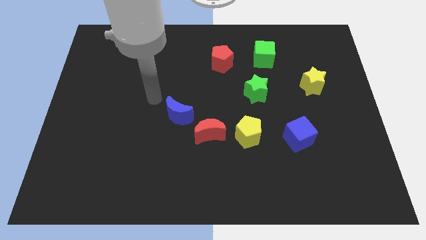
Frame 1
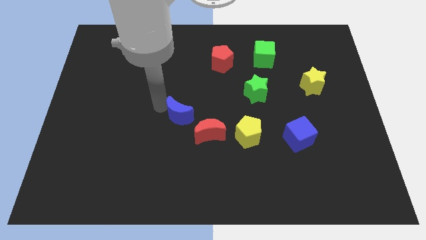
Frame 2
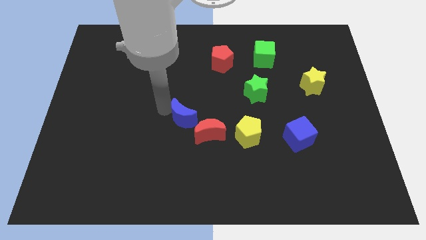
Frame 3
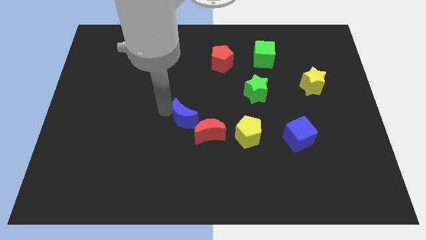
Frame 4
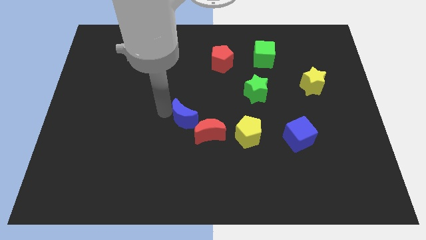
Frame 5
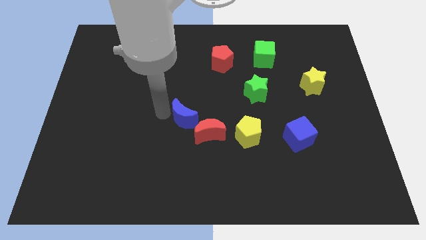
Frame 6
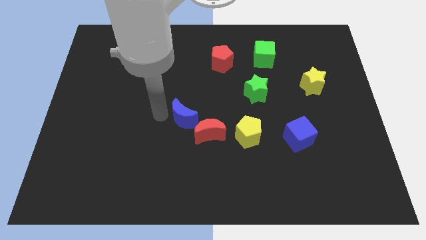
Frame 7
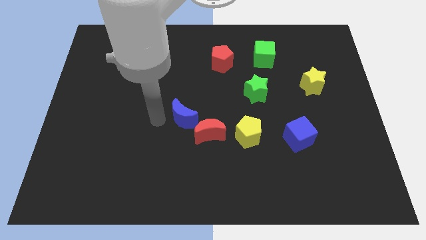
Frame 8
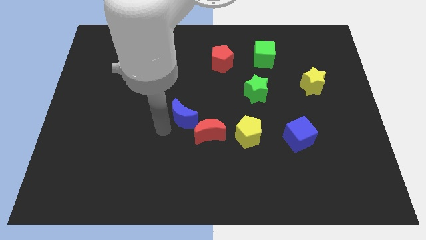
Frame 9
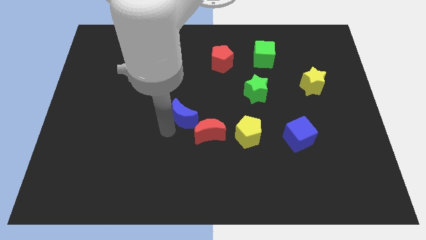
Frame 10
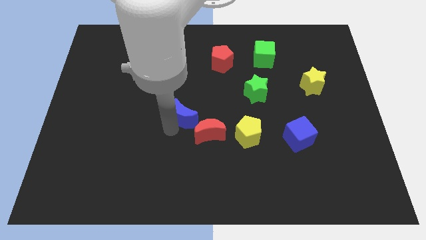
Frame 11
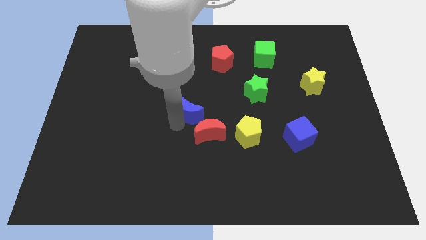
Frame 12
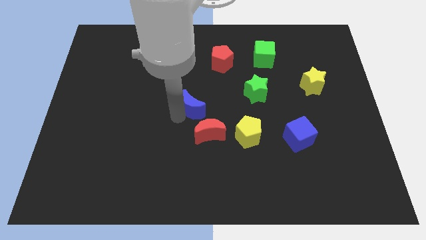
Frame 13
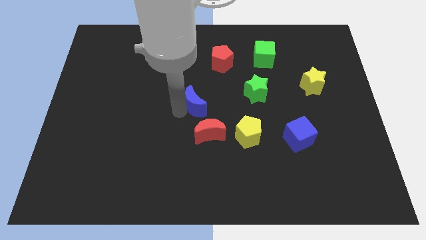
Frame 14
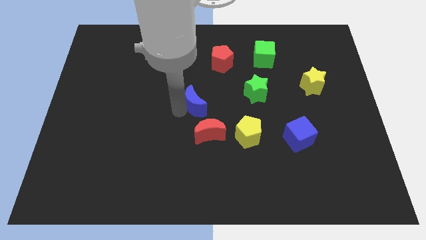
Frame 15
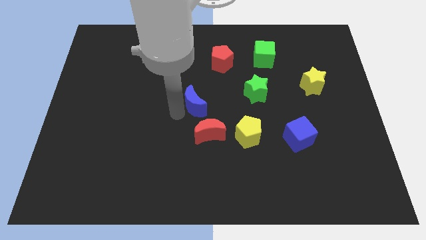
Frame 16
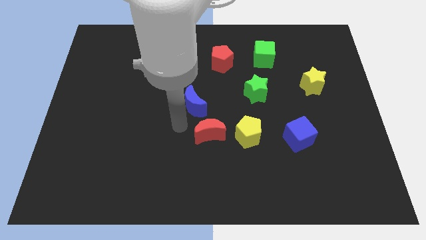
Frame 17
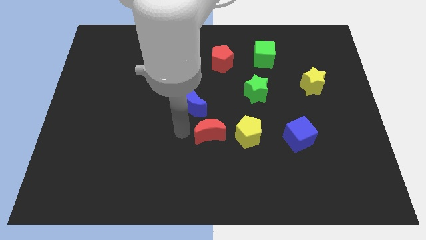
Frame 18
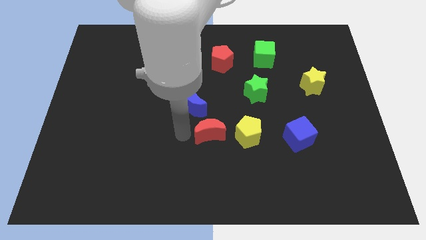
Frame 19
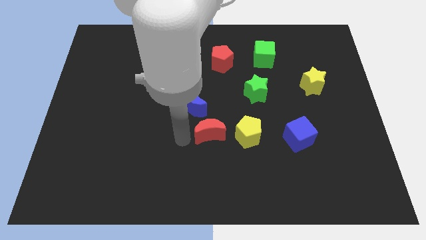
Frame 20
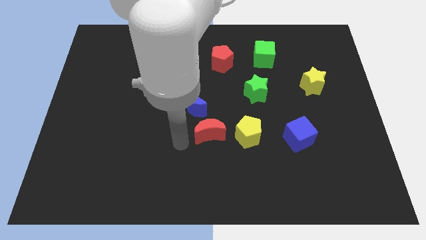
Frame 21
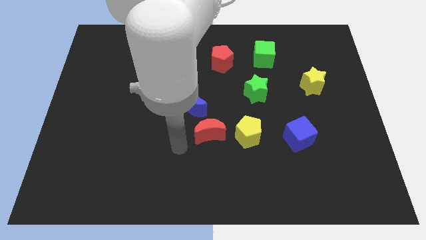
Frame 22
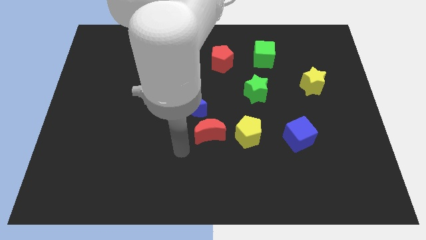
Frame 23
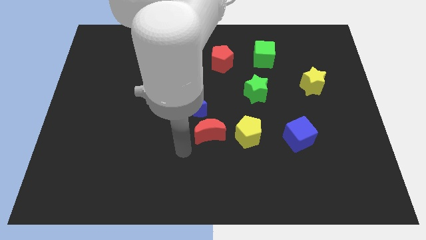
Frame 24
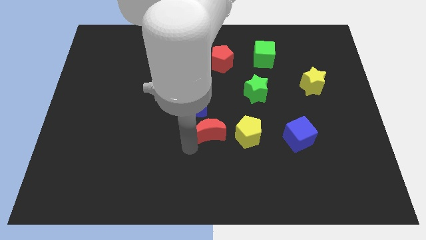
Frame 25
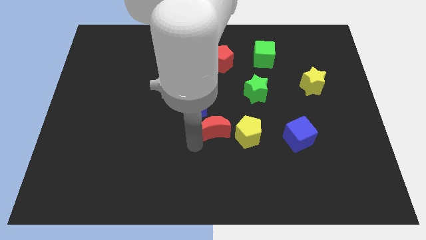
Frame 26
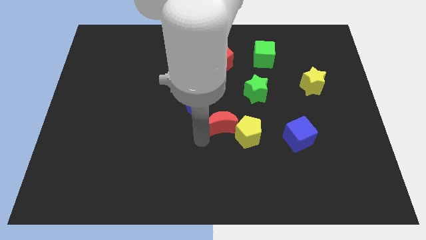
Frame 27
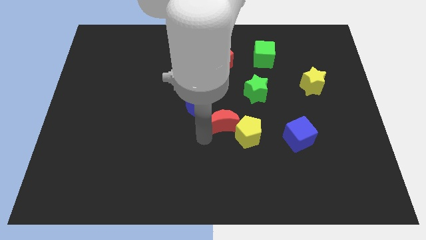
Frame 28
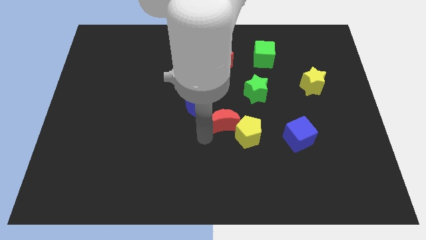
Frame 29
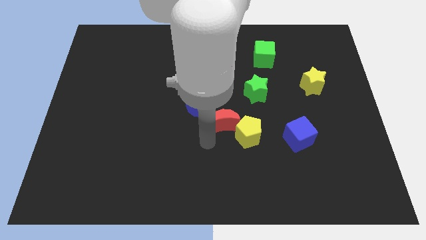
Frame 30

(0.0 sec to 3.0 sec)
place the blue crescent and red moon diagonally to the yellow pentagon

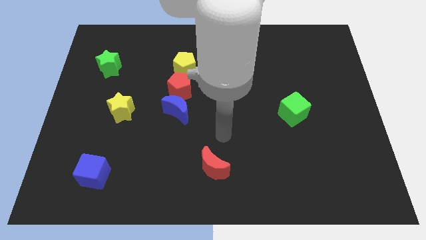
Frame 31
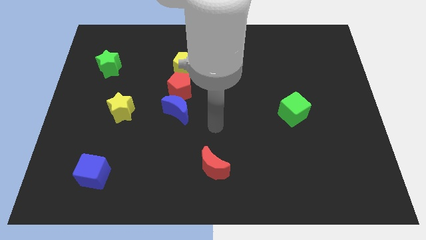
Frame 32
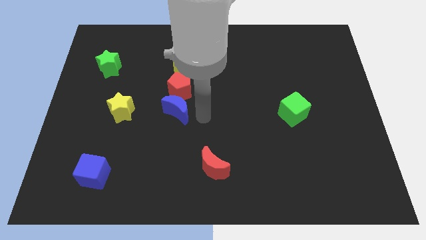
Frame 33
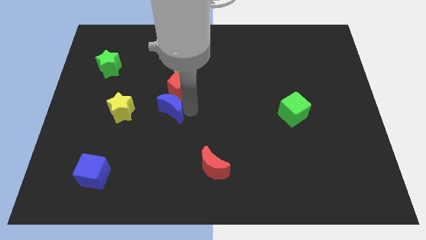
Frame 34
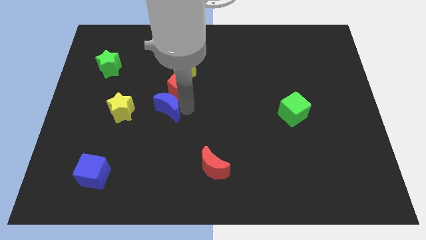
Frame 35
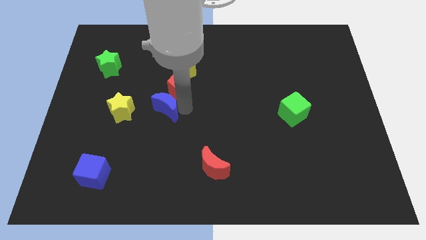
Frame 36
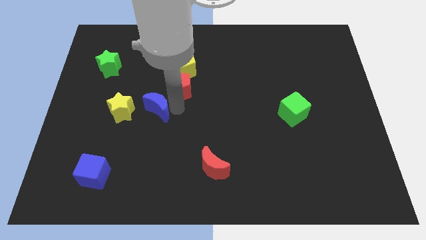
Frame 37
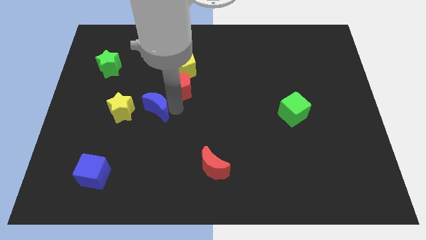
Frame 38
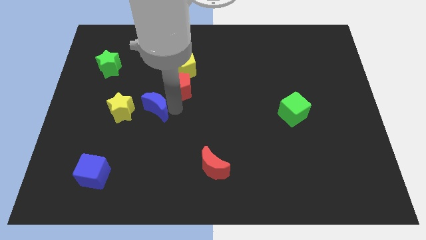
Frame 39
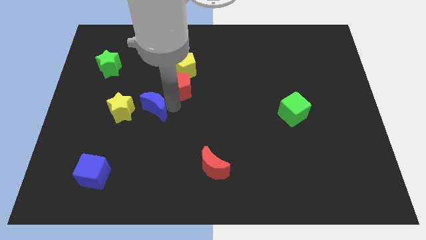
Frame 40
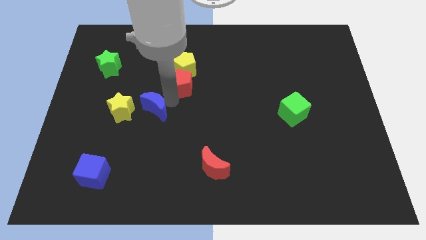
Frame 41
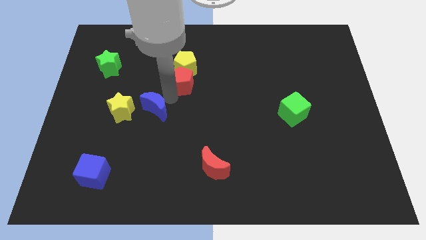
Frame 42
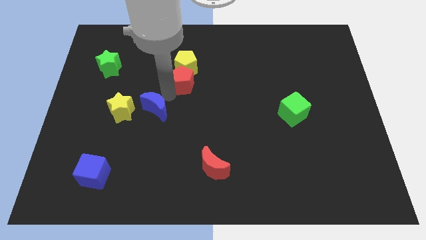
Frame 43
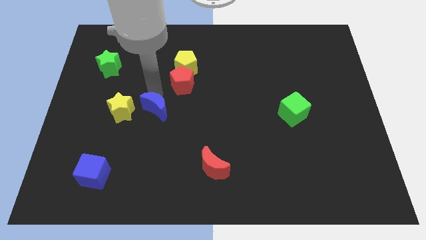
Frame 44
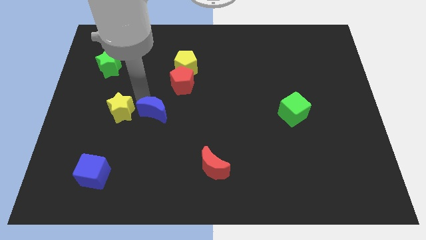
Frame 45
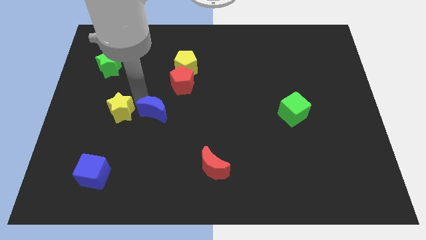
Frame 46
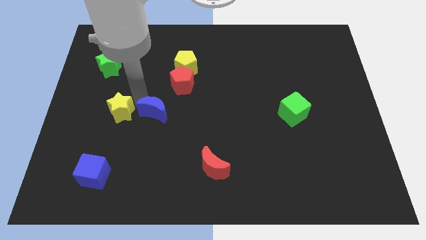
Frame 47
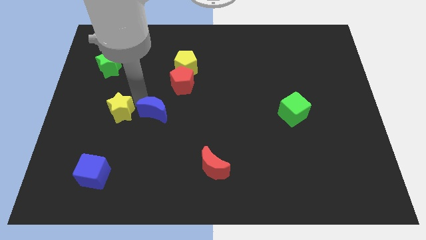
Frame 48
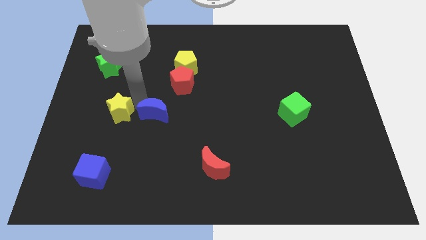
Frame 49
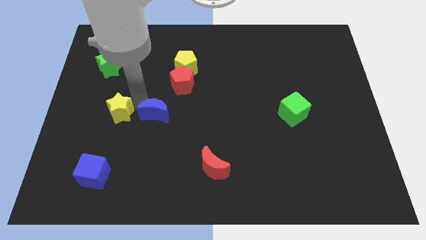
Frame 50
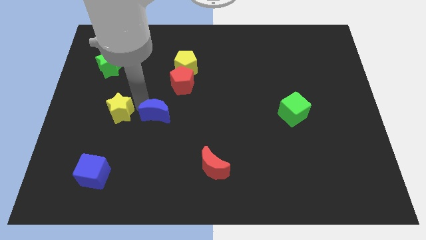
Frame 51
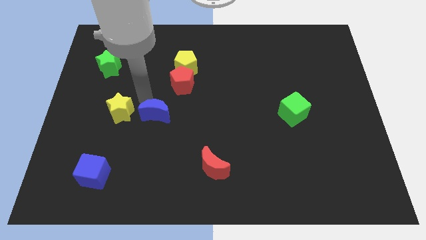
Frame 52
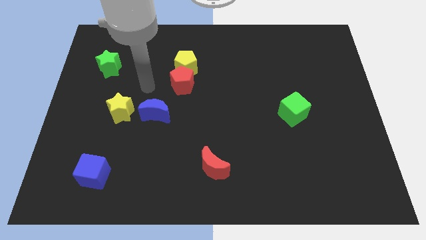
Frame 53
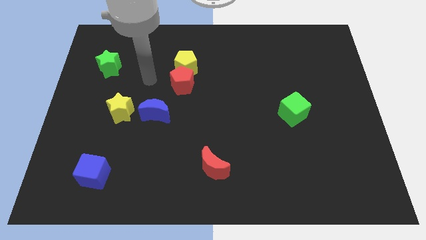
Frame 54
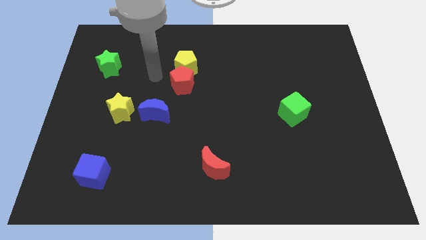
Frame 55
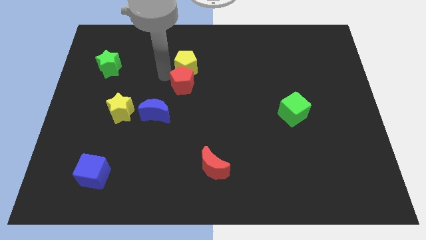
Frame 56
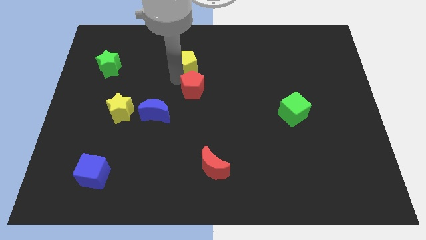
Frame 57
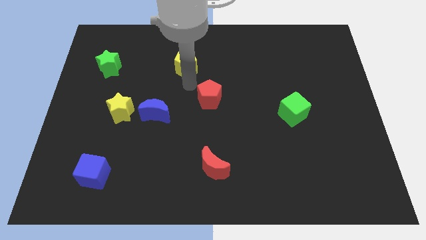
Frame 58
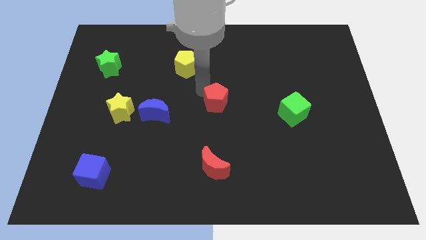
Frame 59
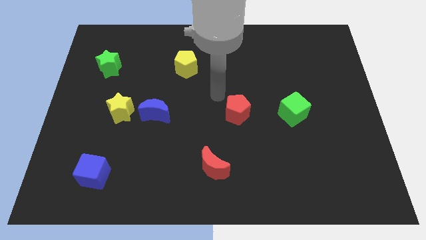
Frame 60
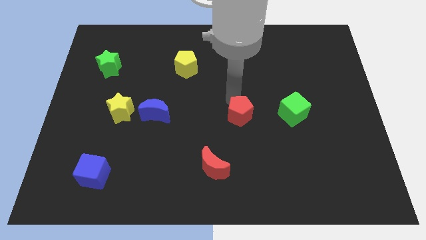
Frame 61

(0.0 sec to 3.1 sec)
separate the blue crescent and red pentagon from the bottom of yellow pentagon

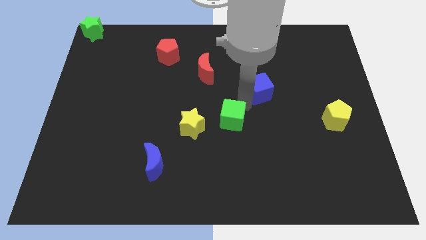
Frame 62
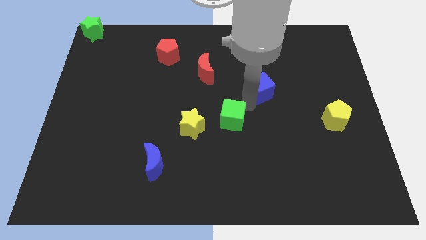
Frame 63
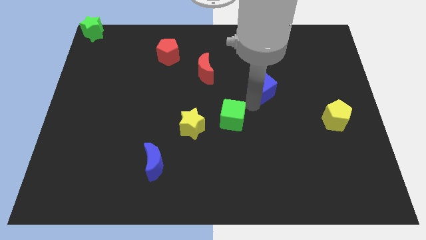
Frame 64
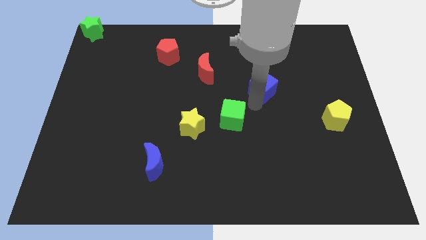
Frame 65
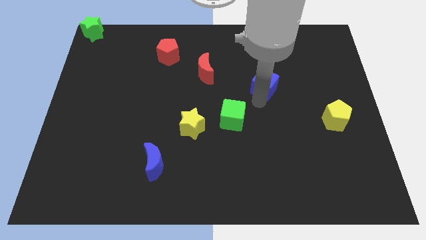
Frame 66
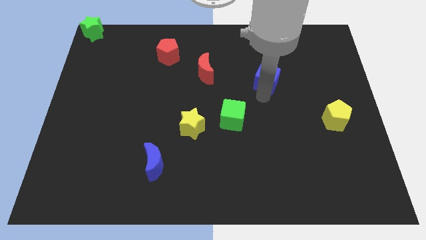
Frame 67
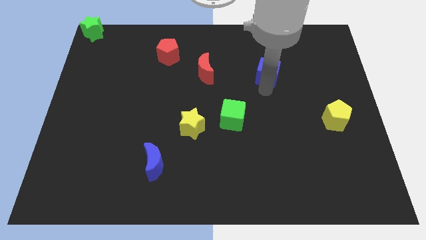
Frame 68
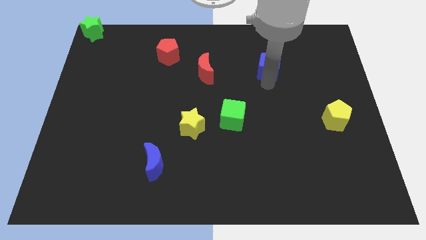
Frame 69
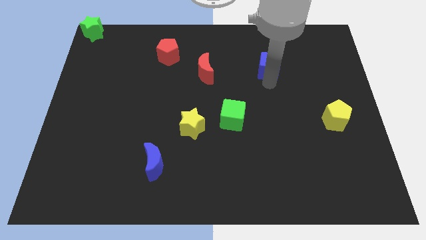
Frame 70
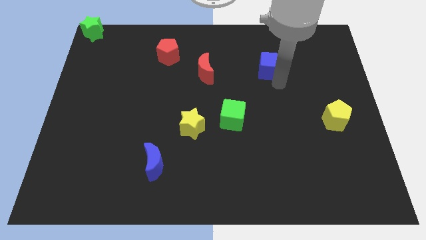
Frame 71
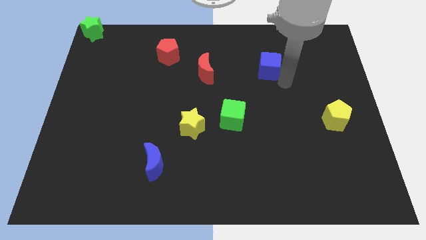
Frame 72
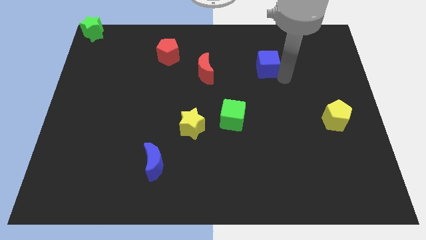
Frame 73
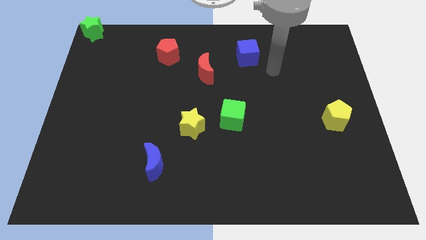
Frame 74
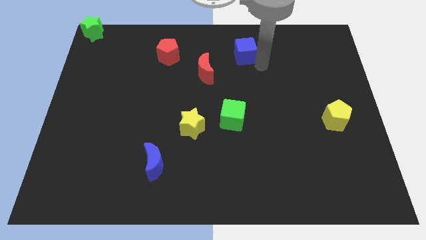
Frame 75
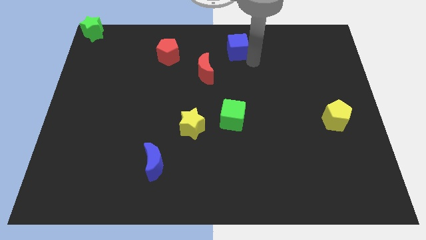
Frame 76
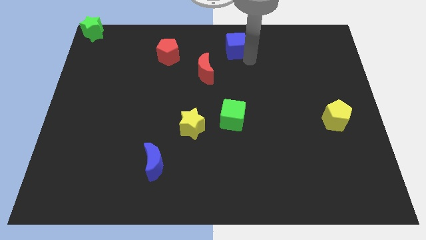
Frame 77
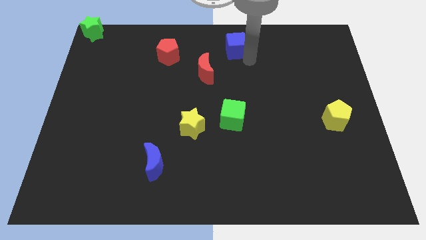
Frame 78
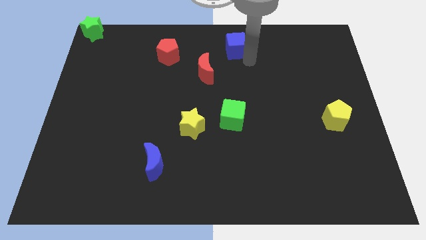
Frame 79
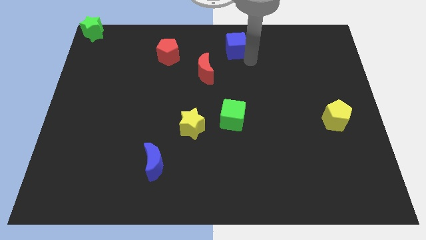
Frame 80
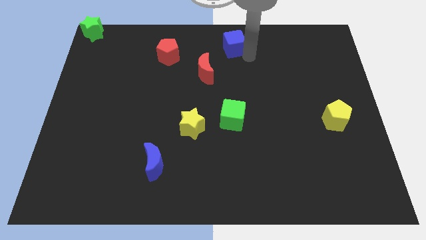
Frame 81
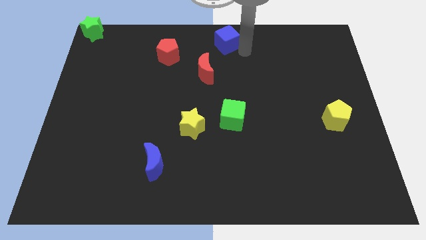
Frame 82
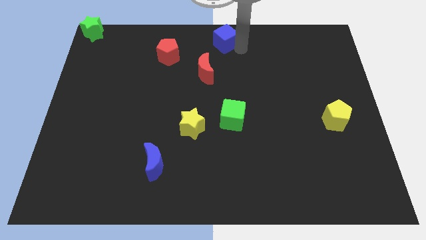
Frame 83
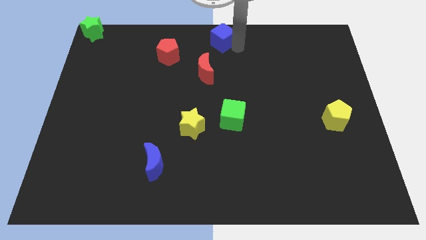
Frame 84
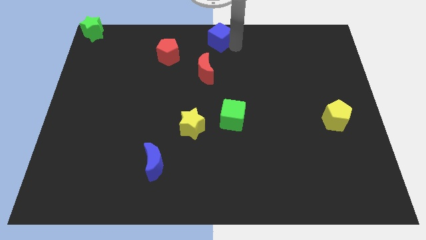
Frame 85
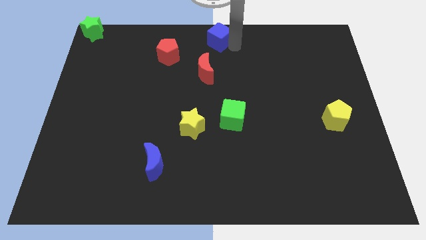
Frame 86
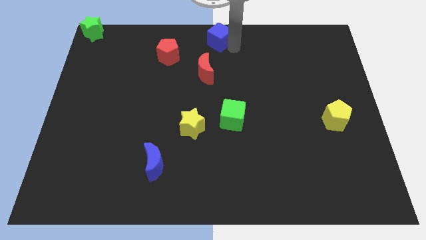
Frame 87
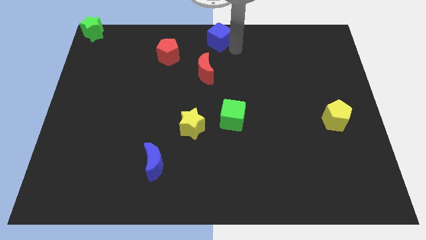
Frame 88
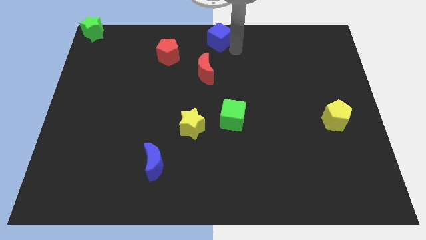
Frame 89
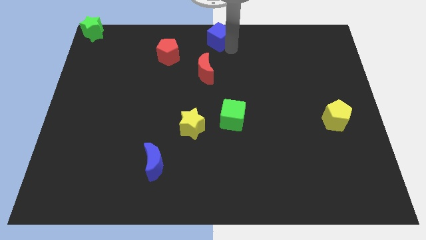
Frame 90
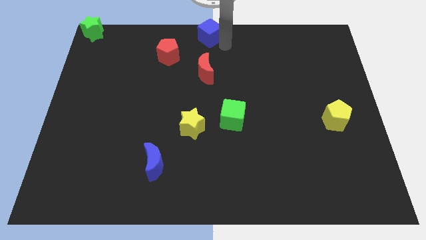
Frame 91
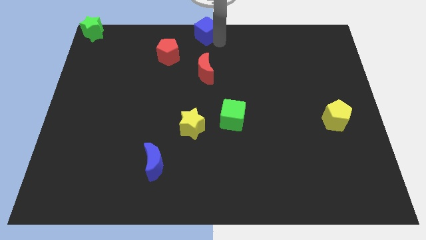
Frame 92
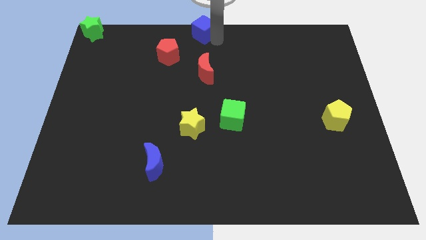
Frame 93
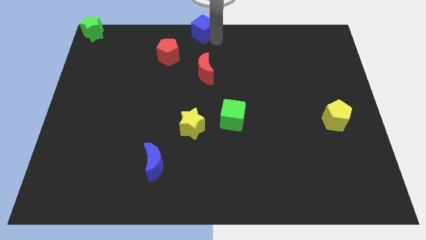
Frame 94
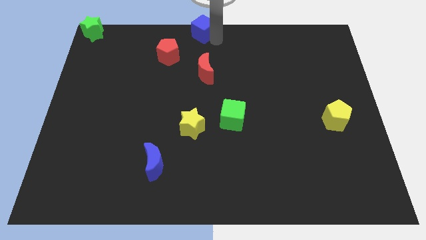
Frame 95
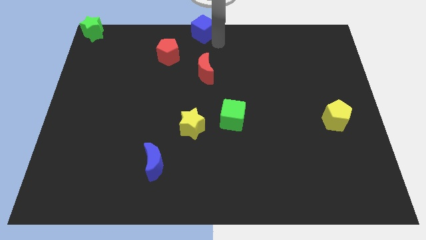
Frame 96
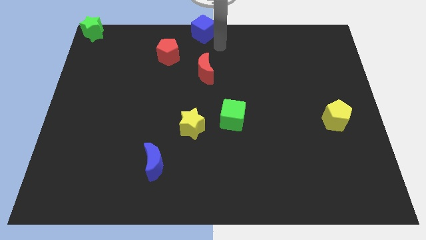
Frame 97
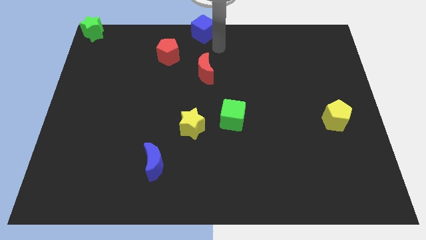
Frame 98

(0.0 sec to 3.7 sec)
push the blue cube to the top center
